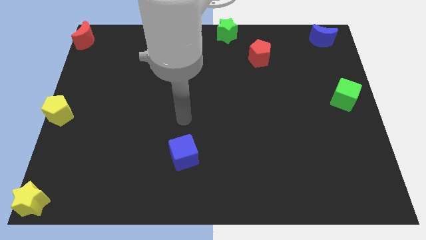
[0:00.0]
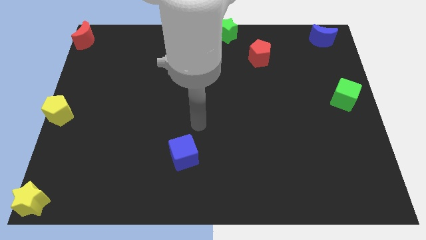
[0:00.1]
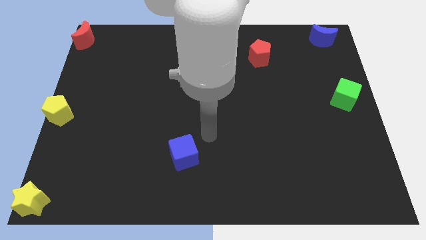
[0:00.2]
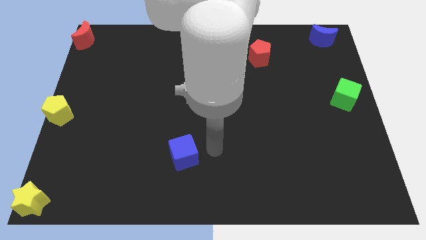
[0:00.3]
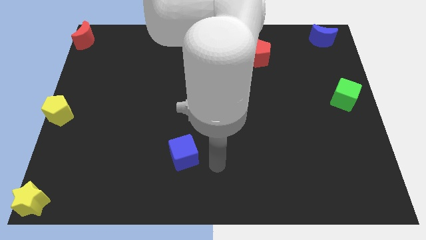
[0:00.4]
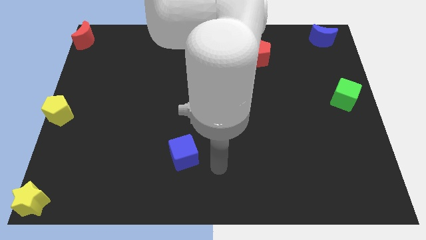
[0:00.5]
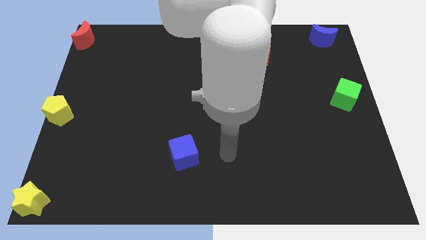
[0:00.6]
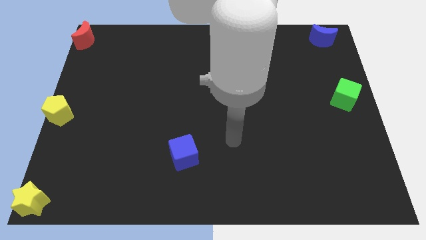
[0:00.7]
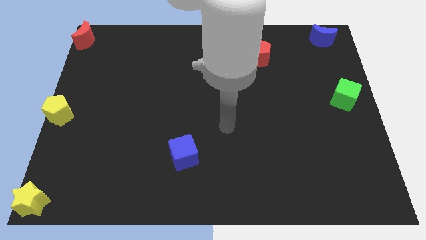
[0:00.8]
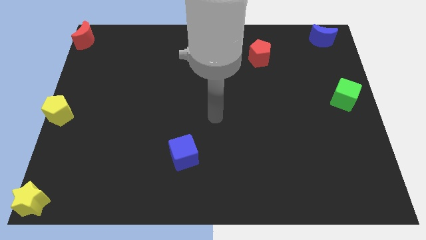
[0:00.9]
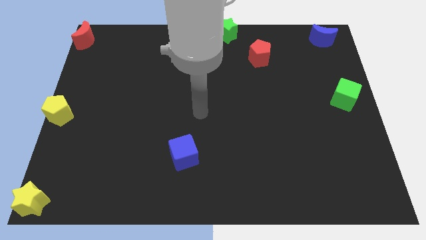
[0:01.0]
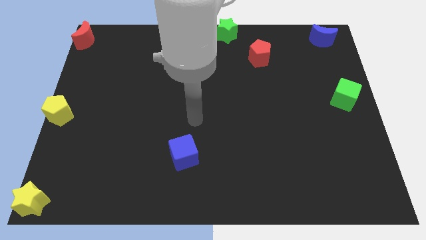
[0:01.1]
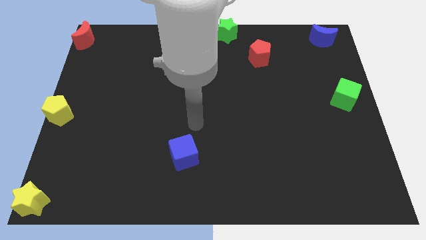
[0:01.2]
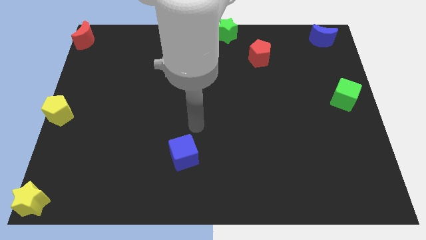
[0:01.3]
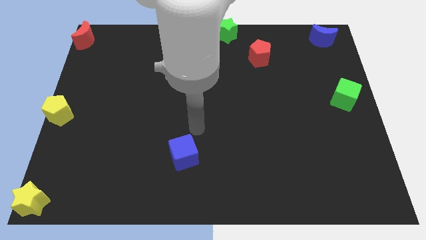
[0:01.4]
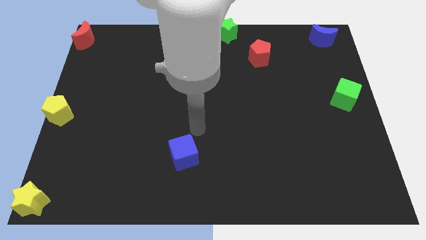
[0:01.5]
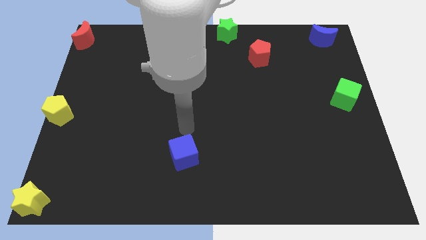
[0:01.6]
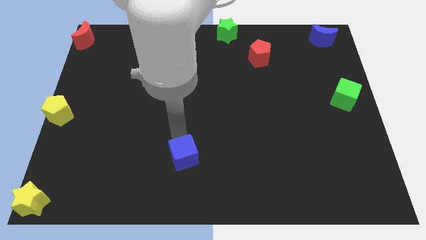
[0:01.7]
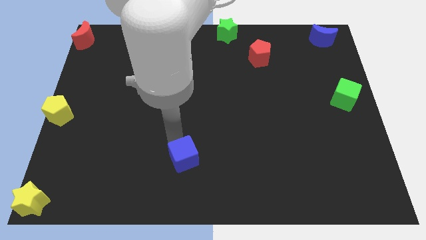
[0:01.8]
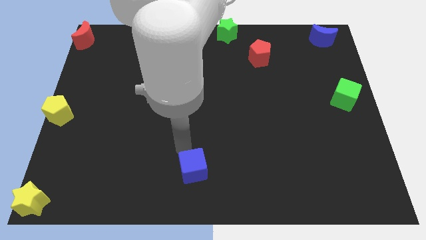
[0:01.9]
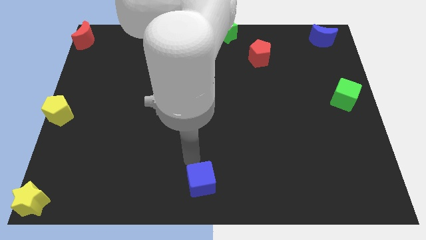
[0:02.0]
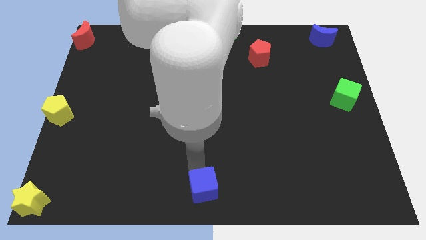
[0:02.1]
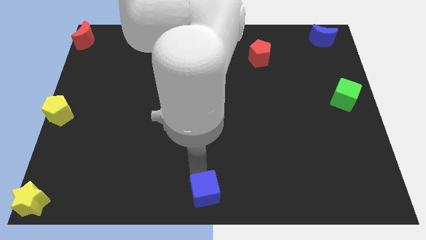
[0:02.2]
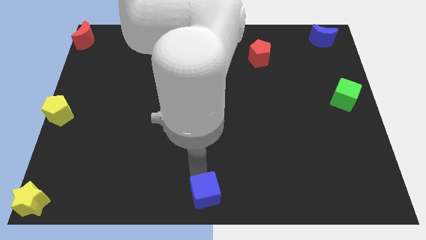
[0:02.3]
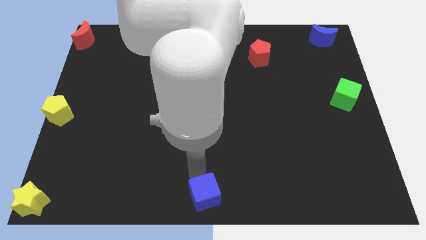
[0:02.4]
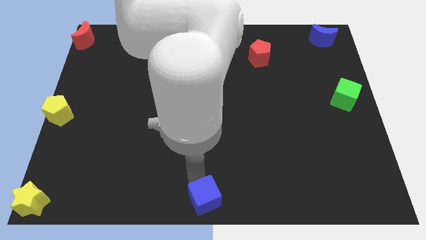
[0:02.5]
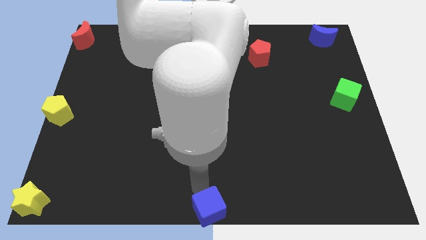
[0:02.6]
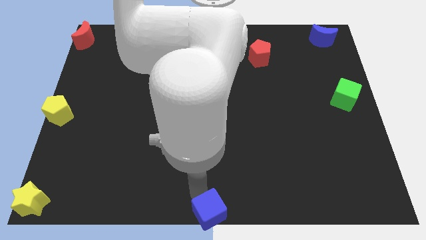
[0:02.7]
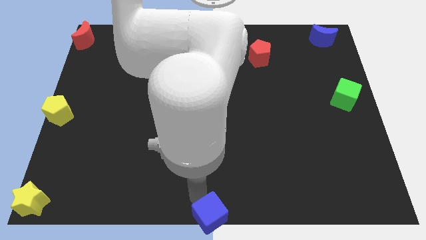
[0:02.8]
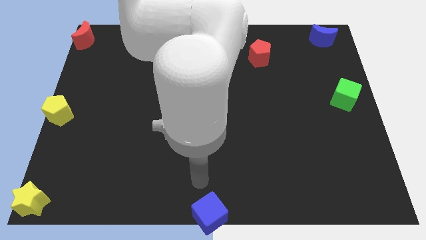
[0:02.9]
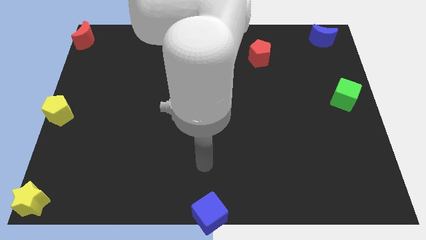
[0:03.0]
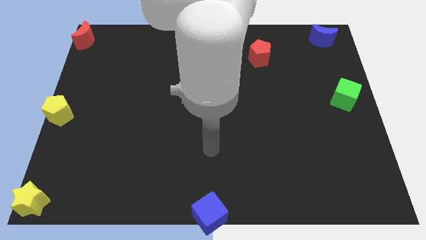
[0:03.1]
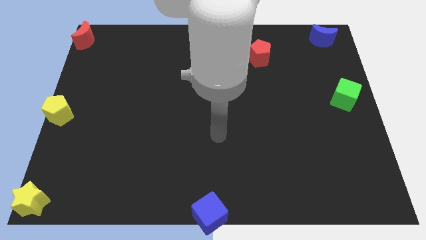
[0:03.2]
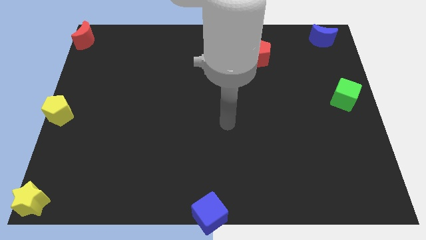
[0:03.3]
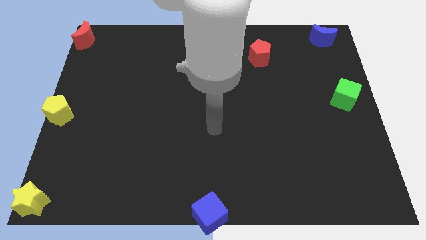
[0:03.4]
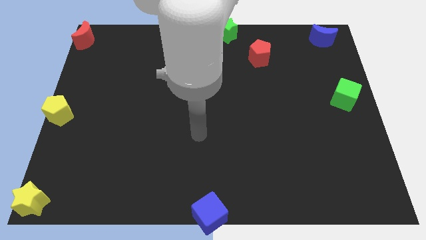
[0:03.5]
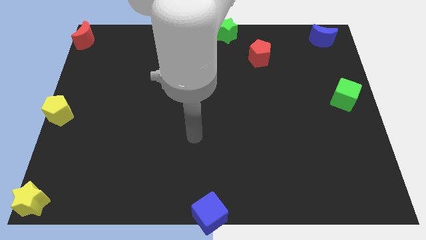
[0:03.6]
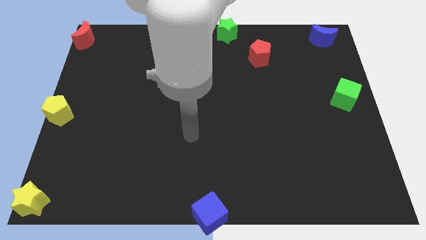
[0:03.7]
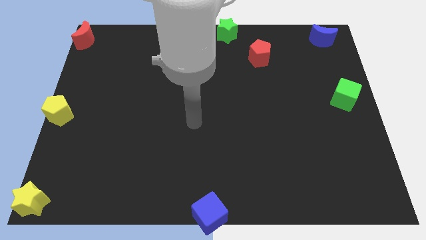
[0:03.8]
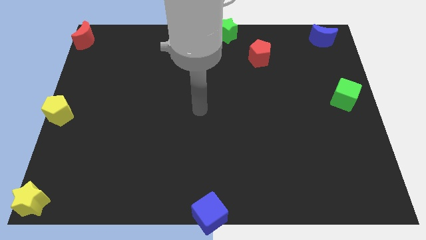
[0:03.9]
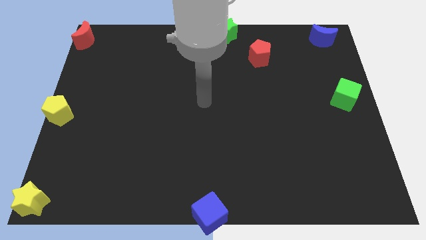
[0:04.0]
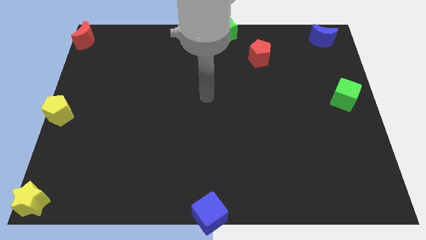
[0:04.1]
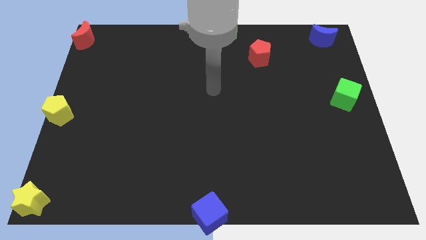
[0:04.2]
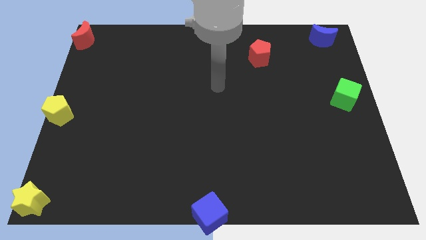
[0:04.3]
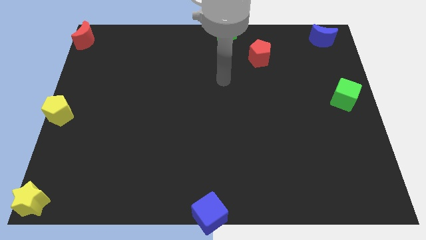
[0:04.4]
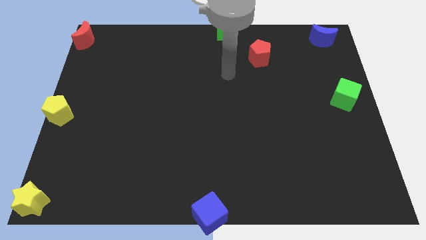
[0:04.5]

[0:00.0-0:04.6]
move the blue cube to the bottom center

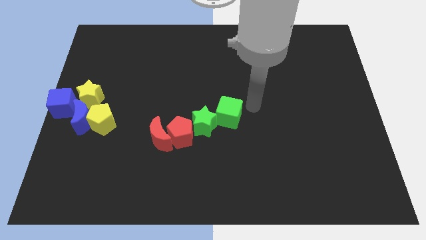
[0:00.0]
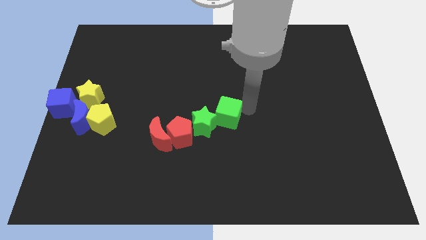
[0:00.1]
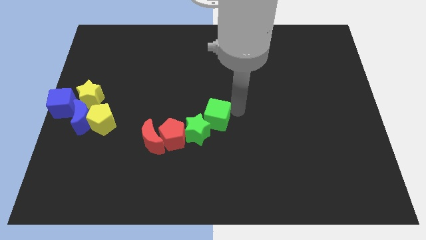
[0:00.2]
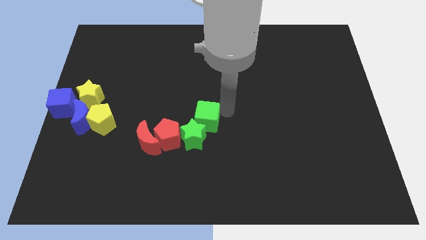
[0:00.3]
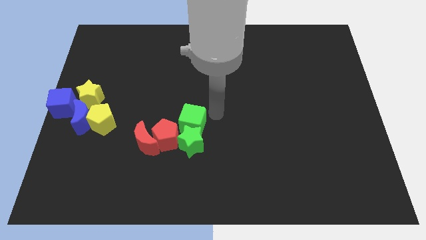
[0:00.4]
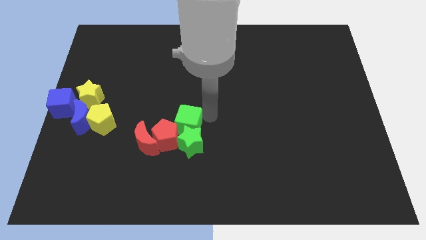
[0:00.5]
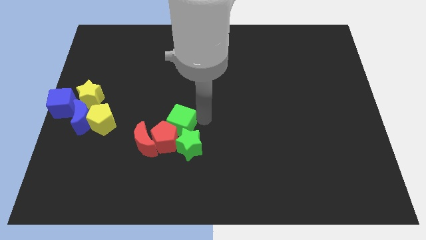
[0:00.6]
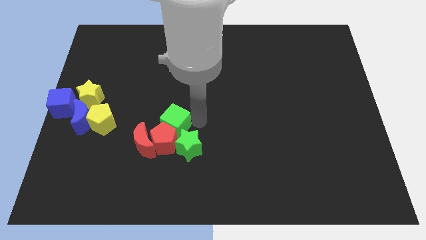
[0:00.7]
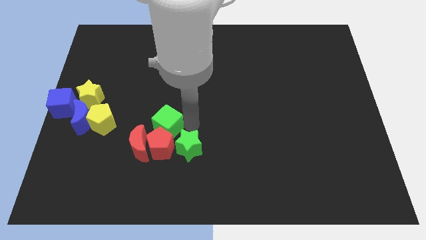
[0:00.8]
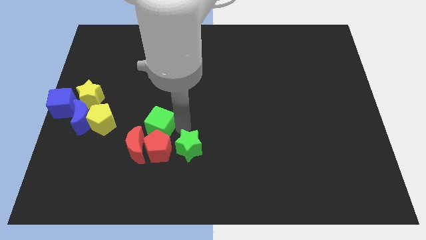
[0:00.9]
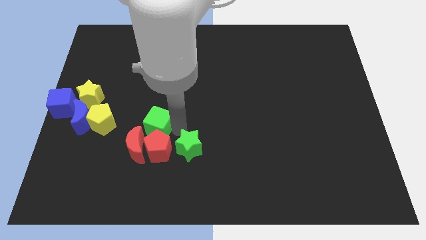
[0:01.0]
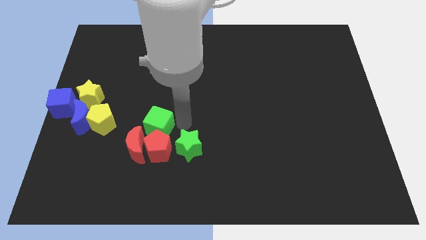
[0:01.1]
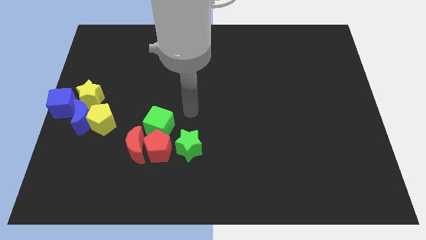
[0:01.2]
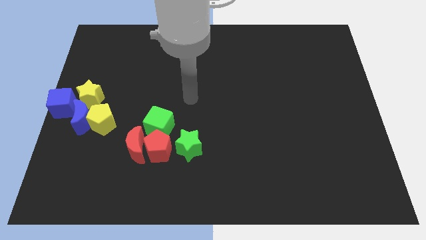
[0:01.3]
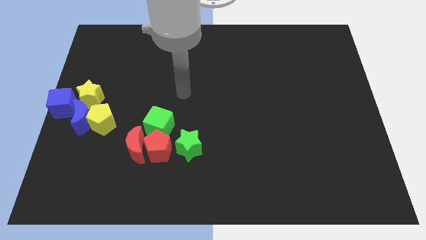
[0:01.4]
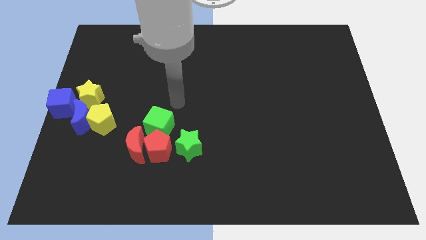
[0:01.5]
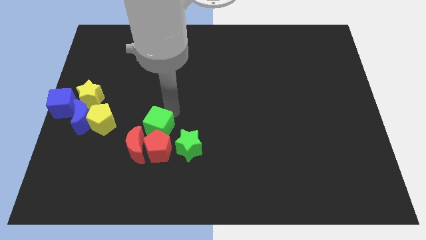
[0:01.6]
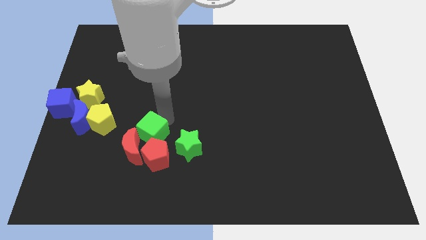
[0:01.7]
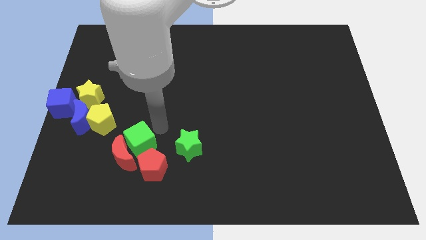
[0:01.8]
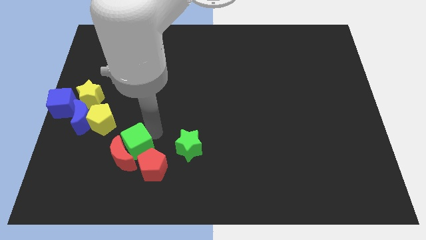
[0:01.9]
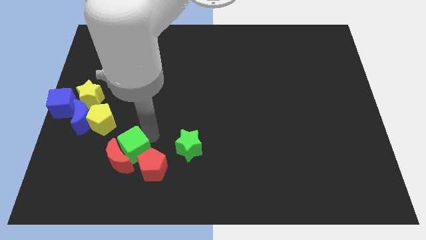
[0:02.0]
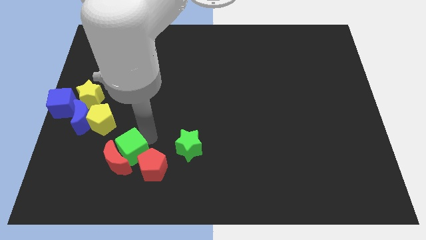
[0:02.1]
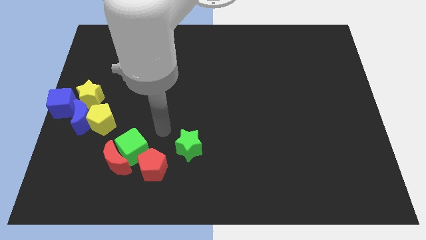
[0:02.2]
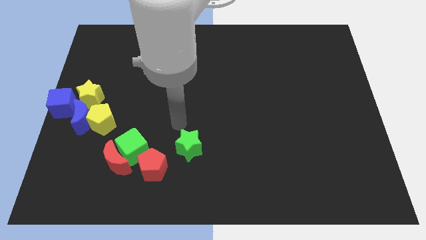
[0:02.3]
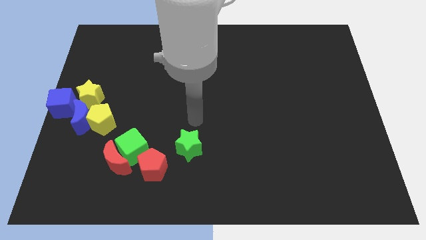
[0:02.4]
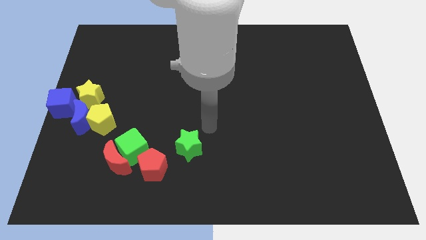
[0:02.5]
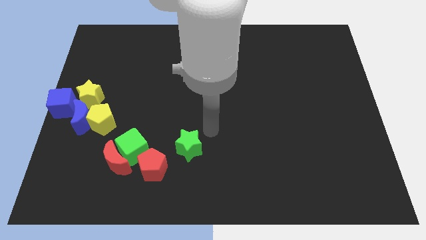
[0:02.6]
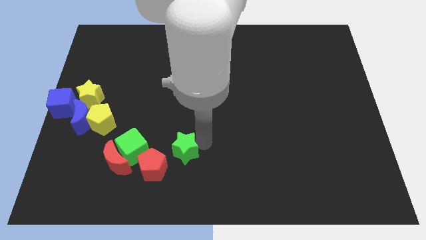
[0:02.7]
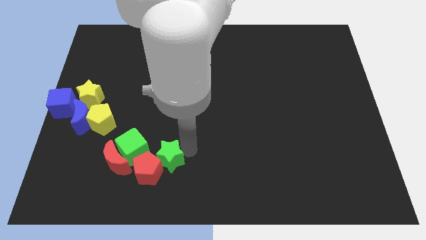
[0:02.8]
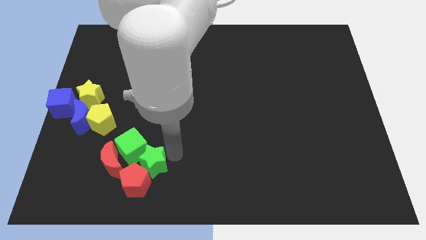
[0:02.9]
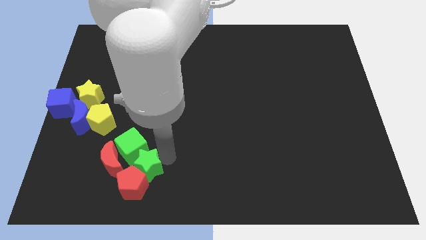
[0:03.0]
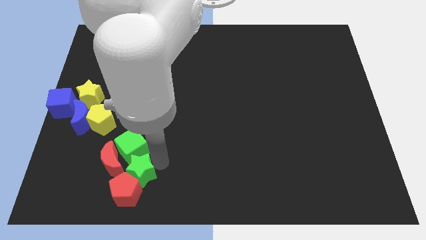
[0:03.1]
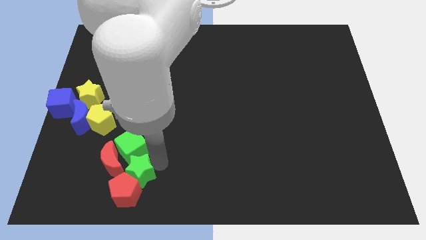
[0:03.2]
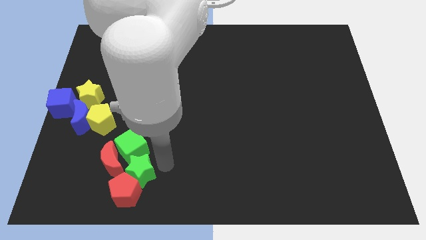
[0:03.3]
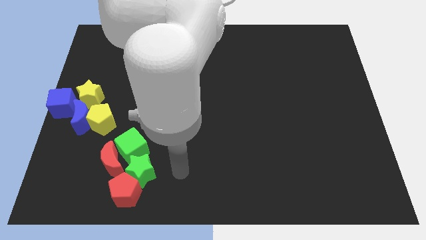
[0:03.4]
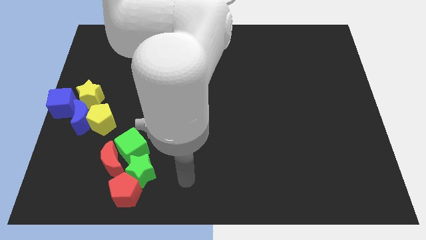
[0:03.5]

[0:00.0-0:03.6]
slide the green and red blocks to the left side

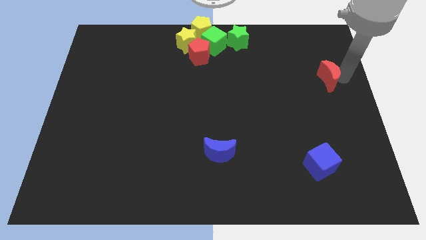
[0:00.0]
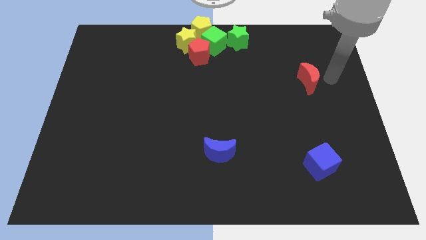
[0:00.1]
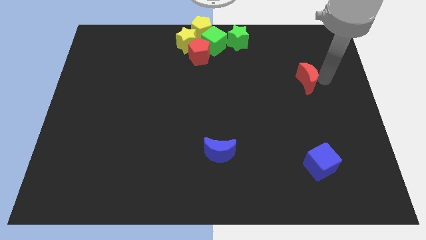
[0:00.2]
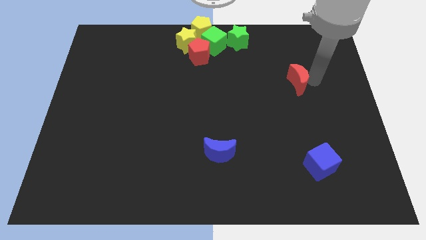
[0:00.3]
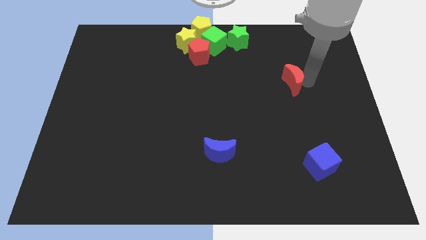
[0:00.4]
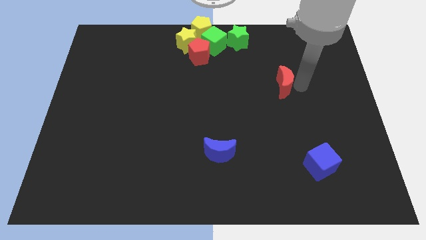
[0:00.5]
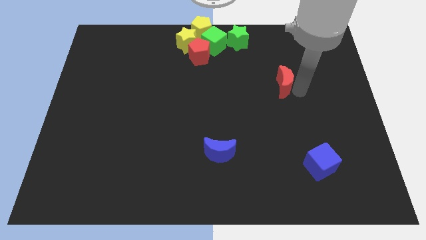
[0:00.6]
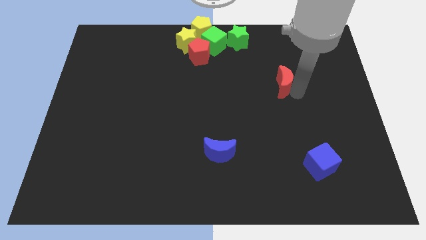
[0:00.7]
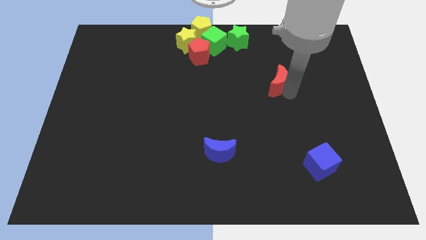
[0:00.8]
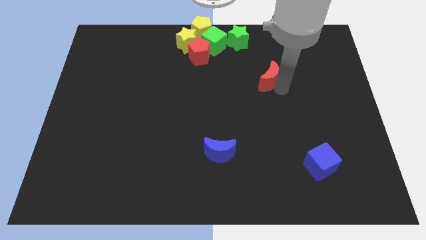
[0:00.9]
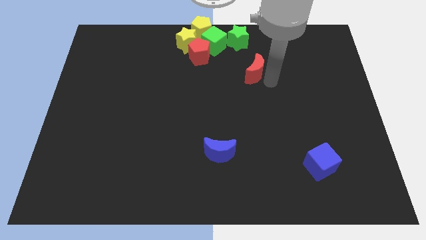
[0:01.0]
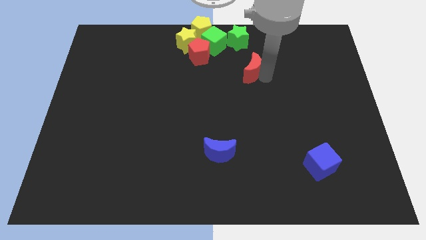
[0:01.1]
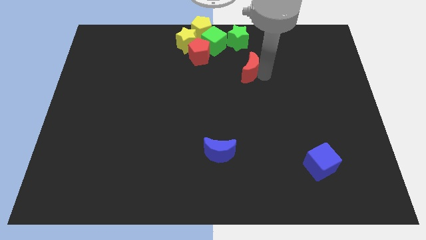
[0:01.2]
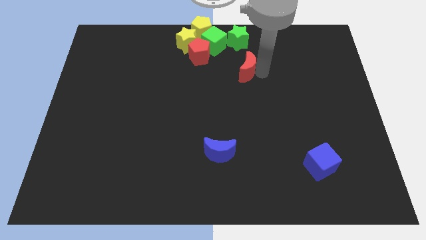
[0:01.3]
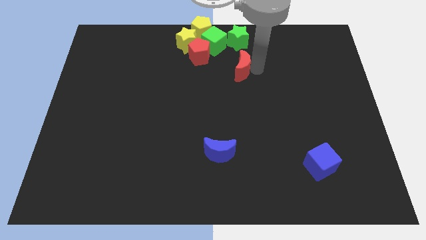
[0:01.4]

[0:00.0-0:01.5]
place the red moon below the green star
